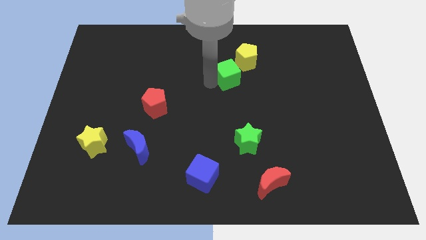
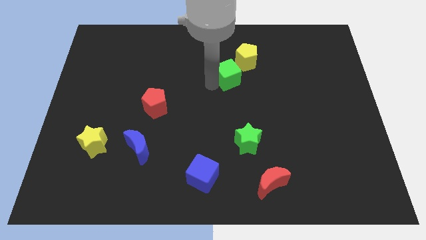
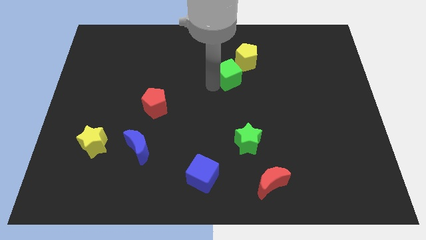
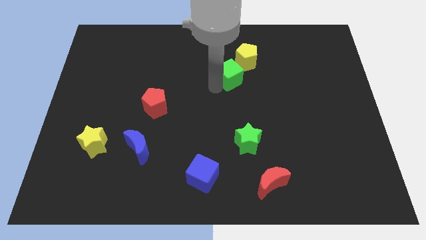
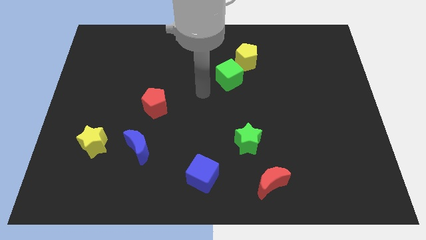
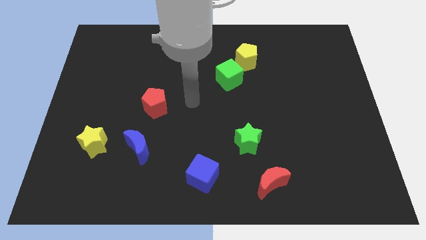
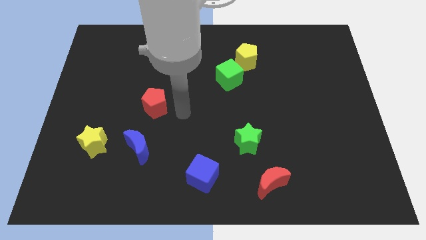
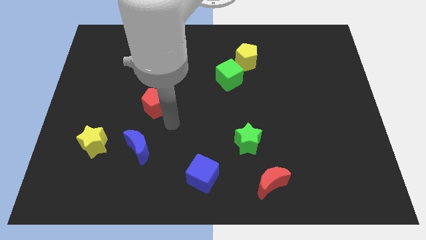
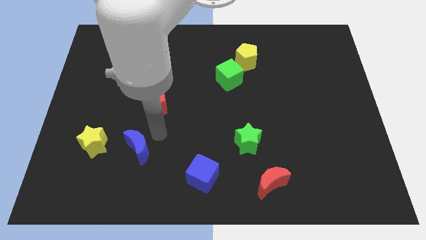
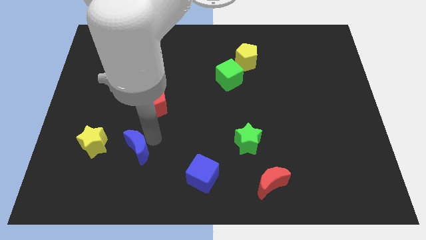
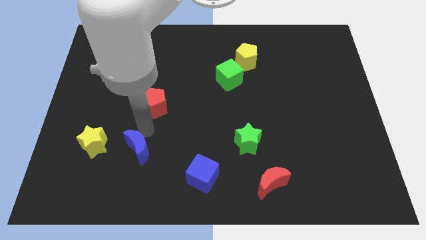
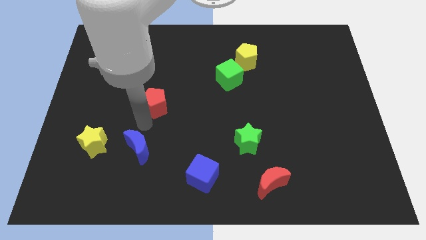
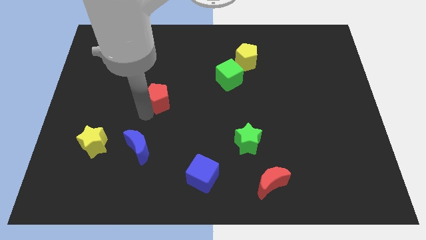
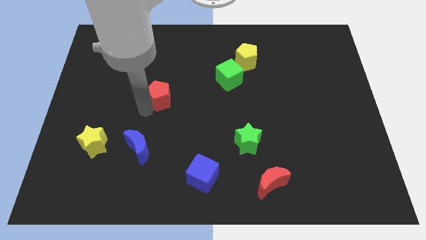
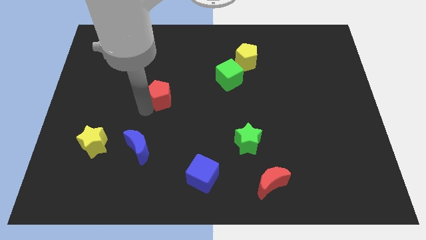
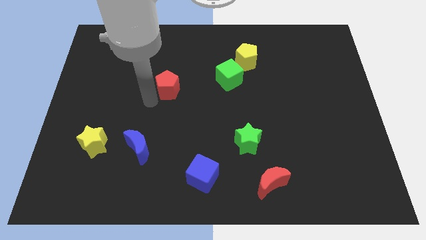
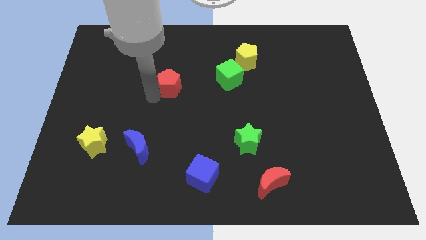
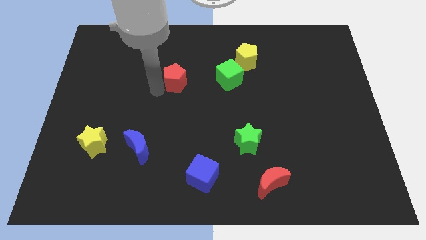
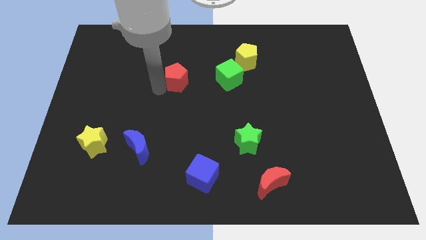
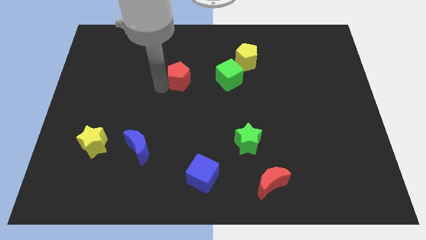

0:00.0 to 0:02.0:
put the red pentagon parallel left to the green cube

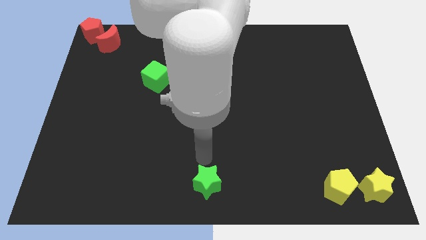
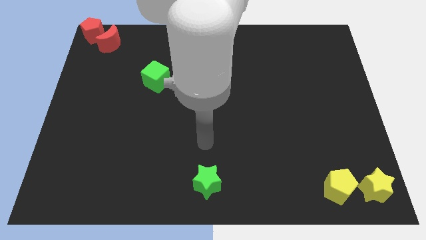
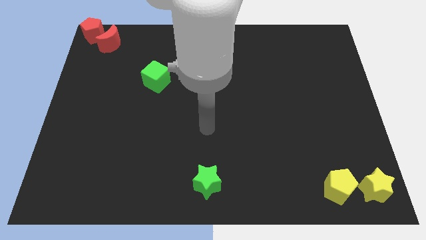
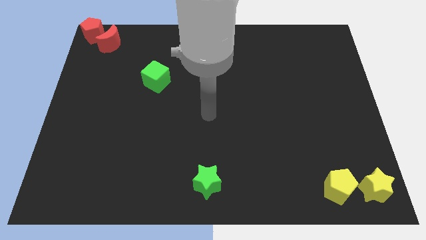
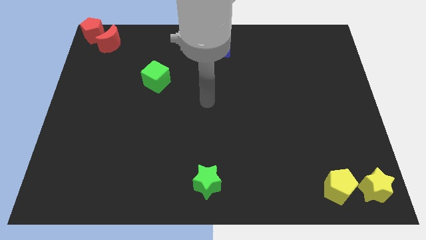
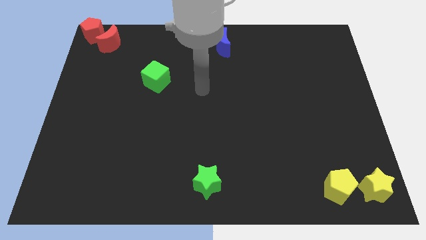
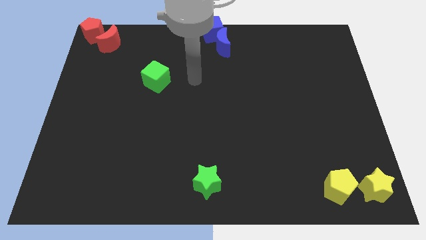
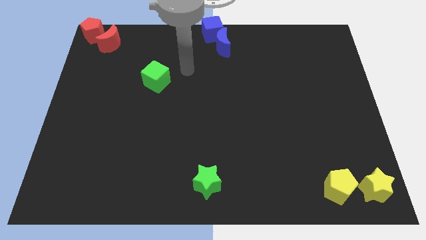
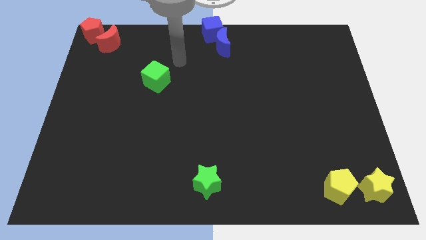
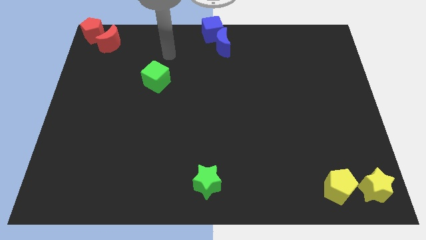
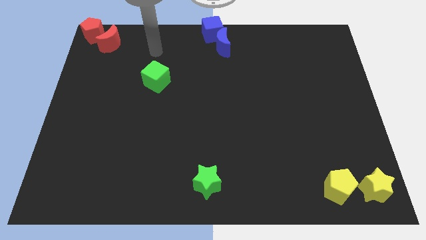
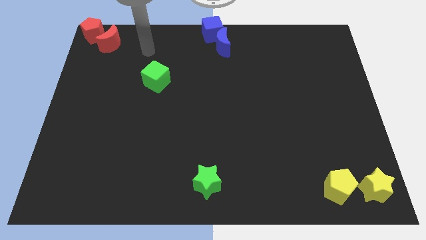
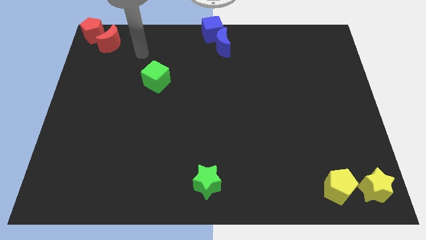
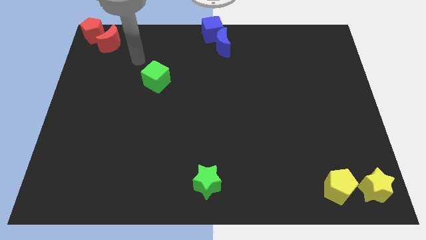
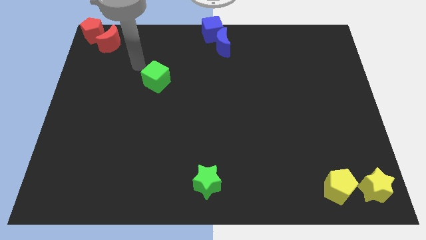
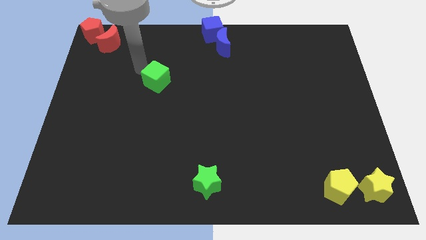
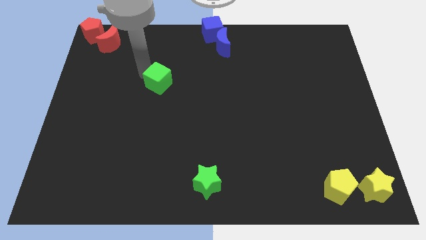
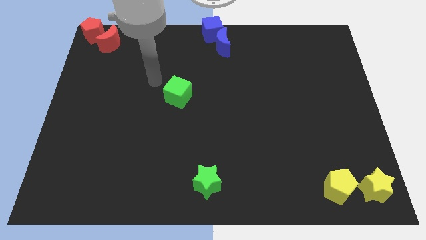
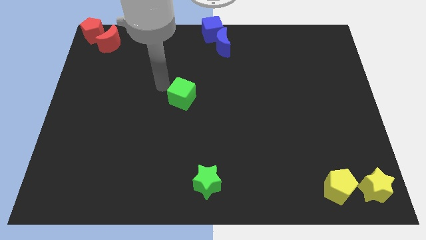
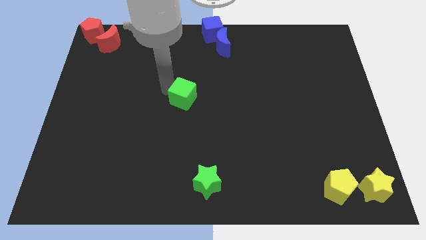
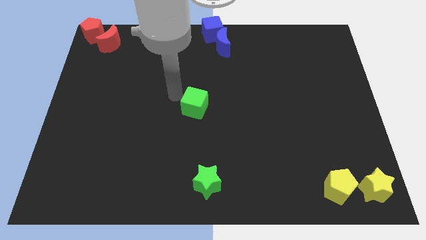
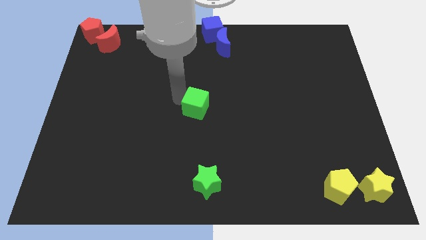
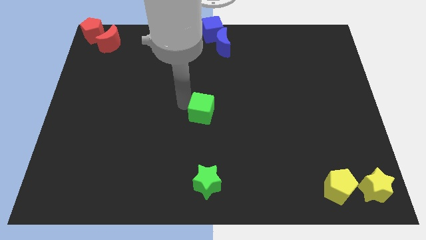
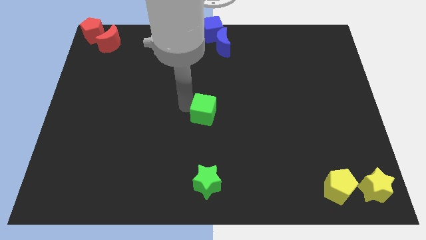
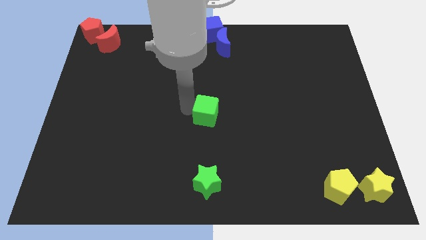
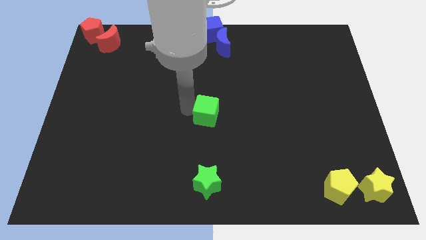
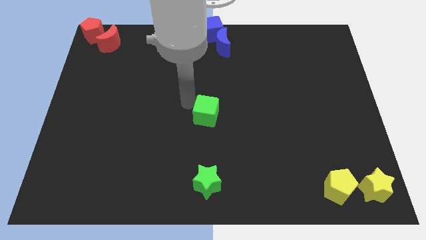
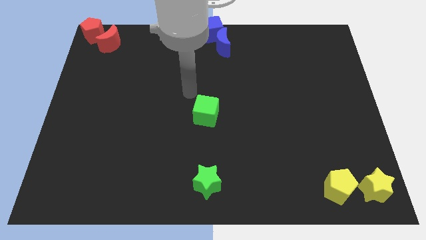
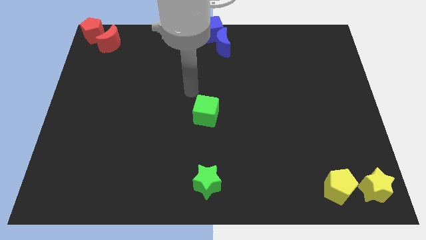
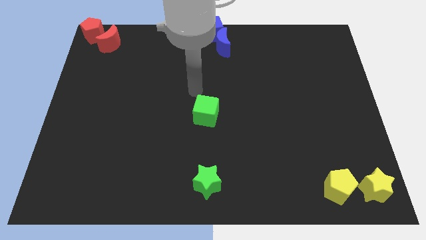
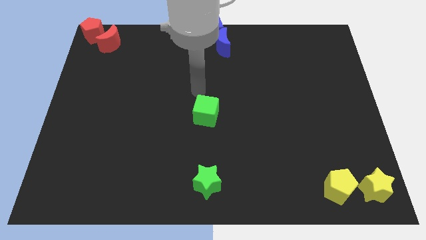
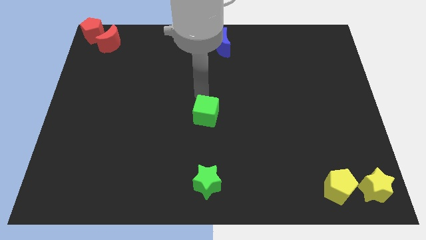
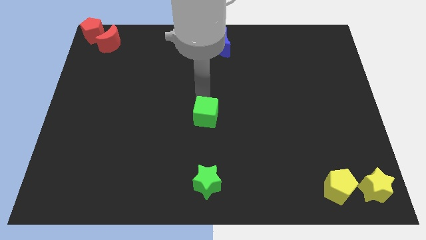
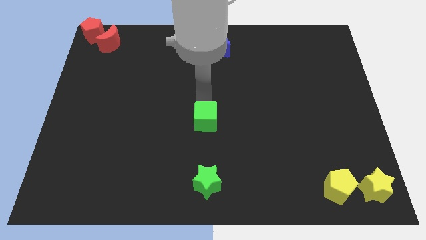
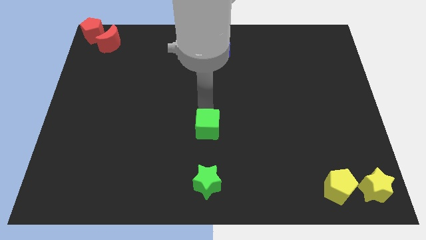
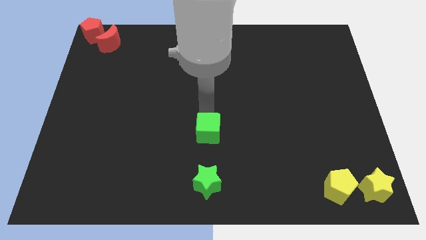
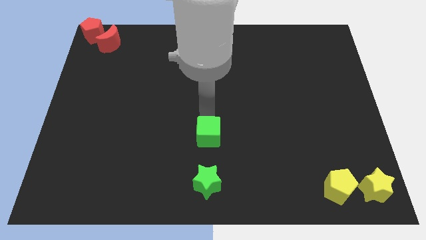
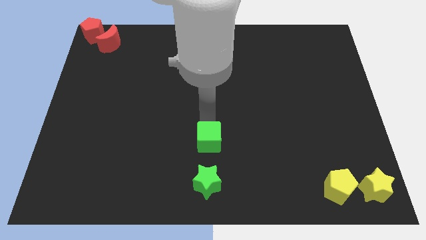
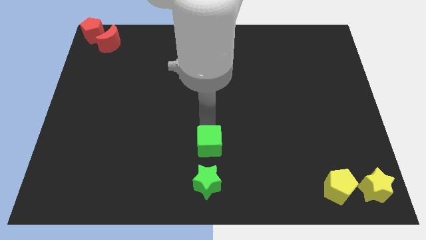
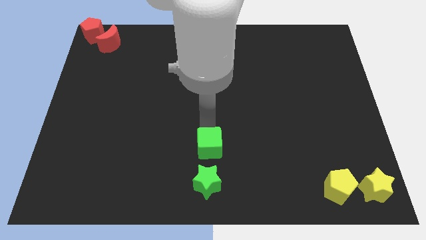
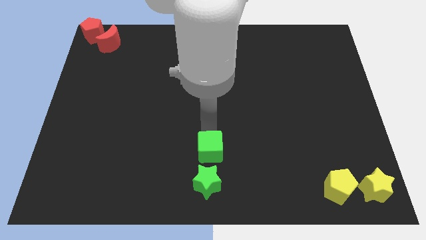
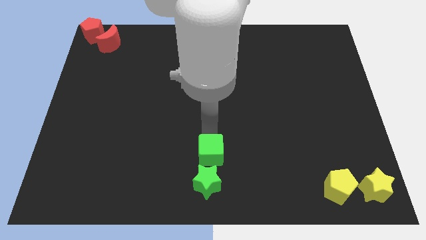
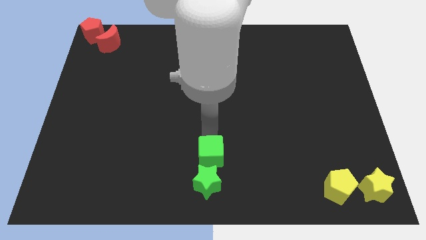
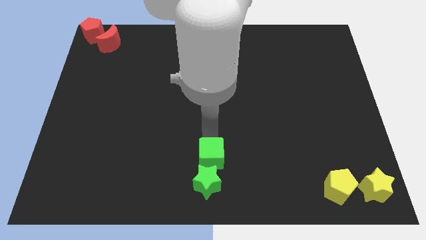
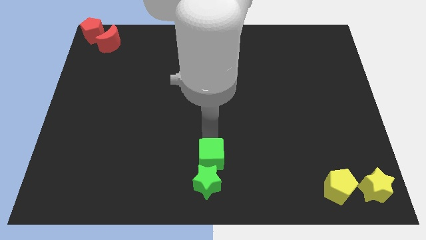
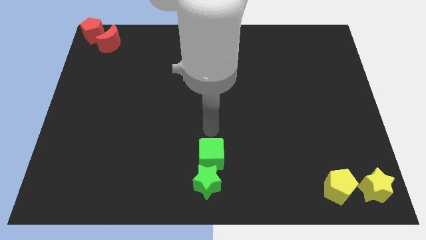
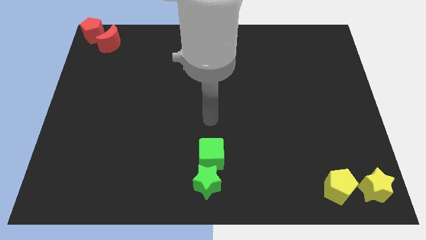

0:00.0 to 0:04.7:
place green cube on the top of the green star

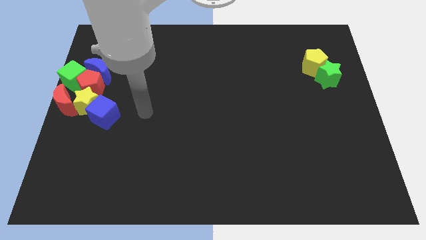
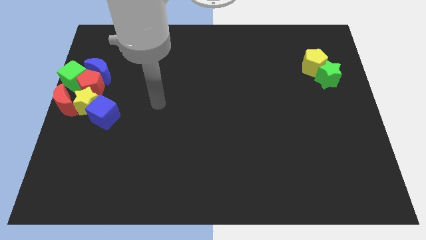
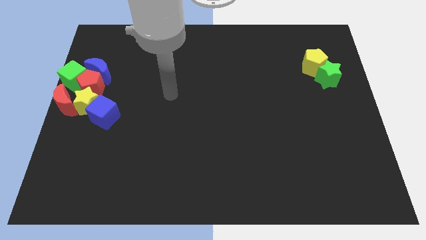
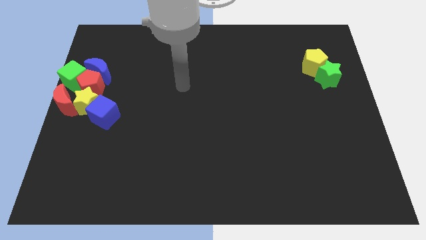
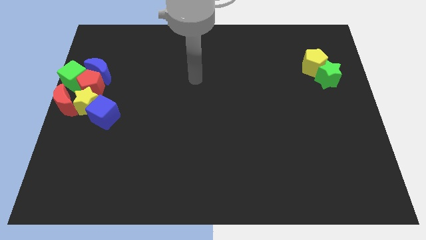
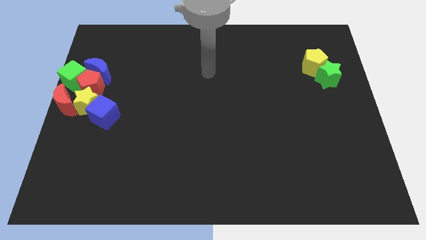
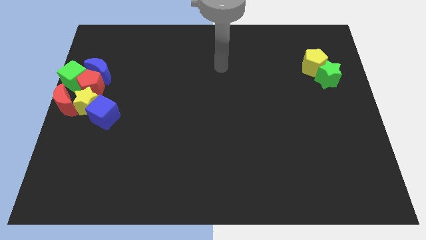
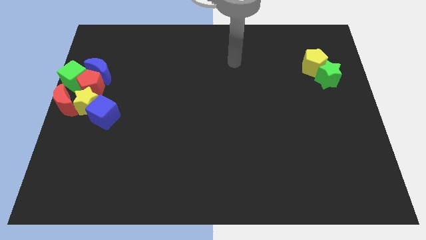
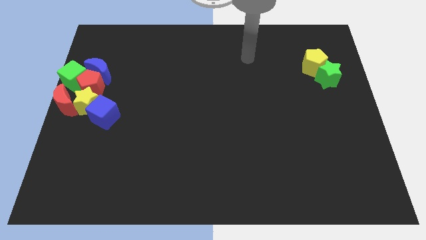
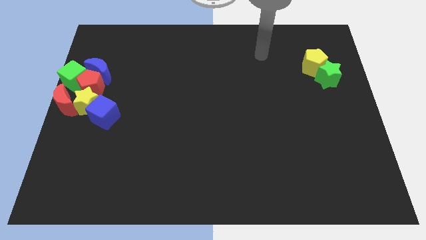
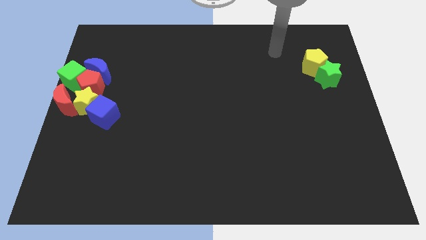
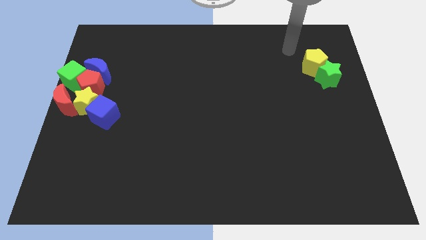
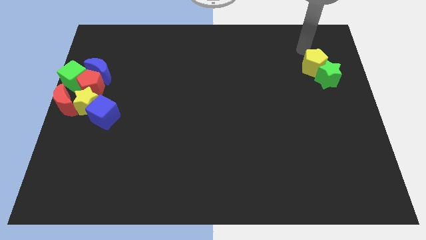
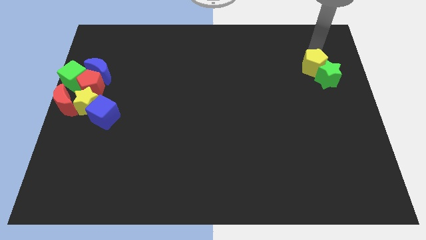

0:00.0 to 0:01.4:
place your arm at the top of the yellow pentagon

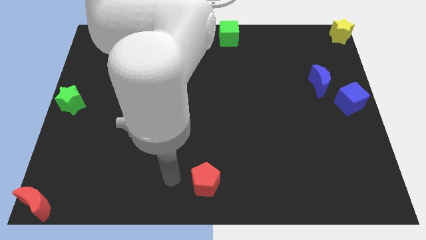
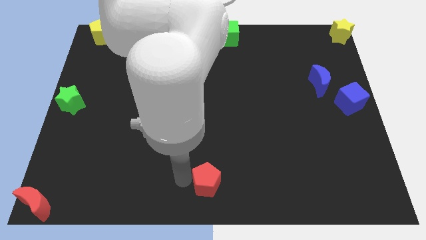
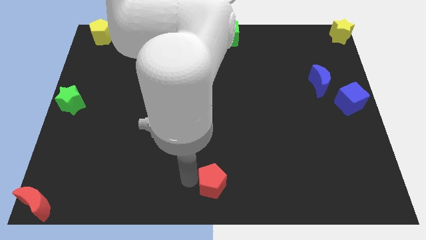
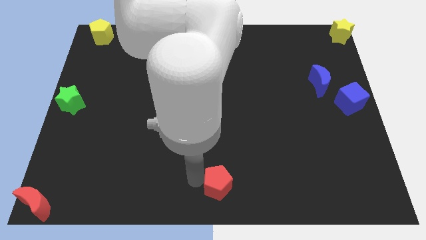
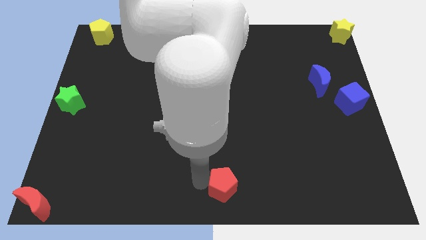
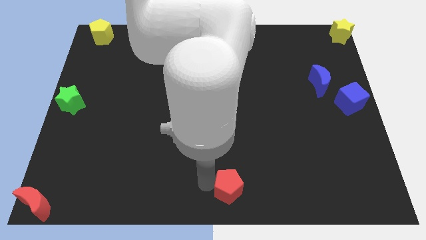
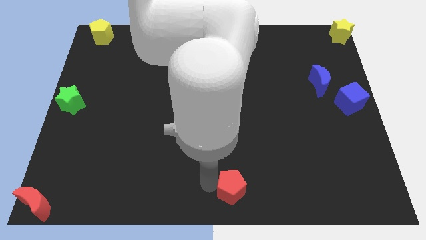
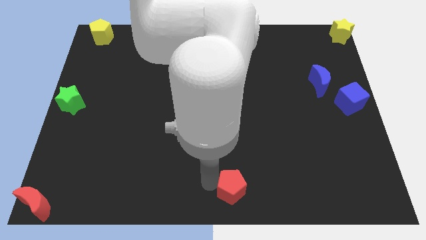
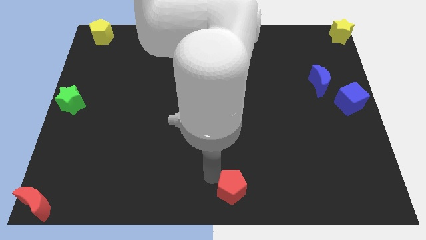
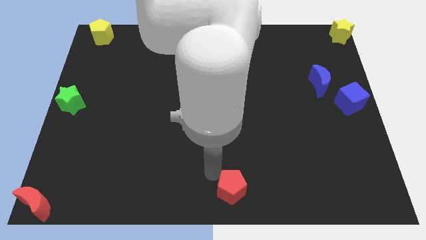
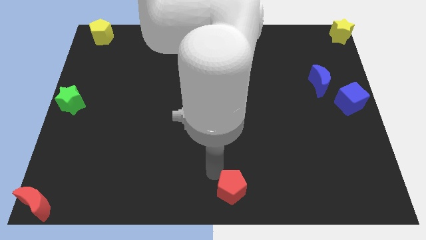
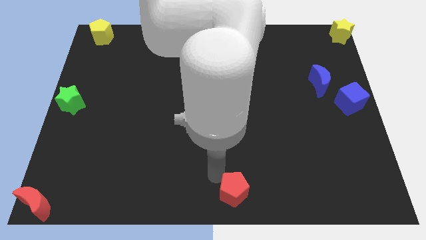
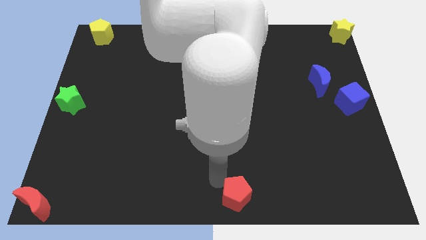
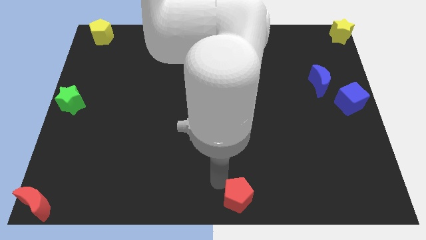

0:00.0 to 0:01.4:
push the red pentagon to the bottom center of the board
